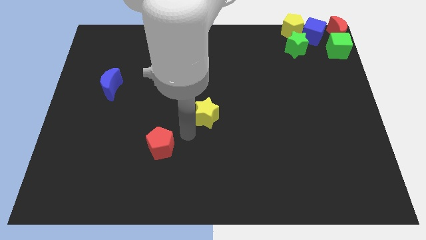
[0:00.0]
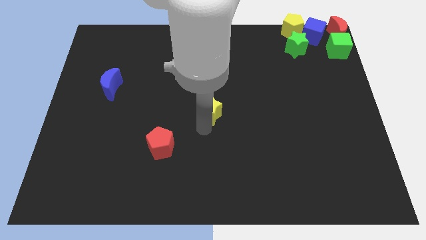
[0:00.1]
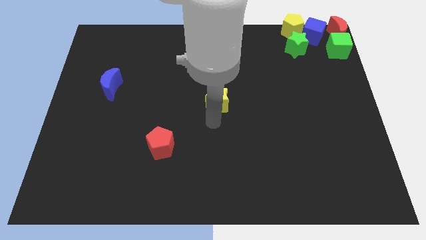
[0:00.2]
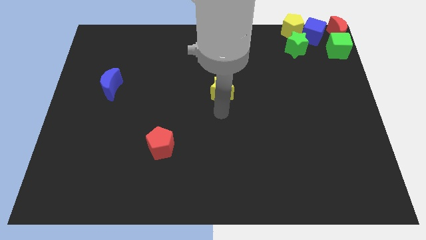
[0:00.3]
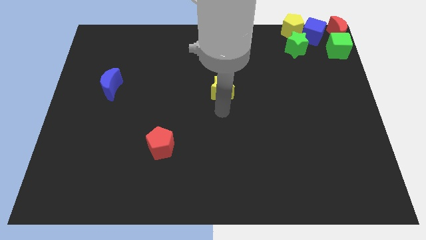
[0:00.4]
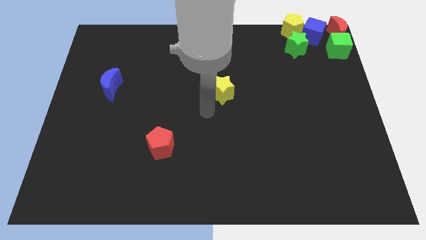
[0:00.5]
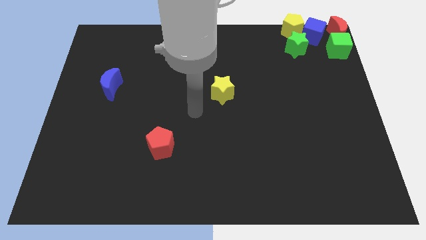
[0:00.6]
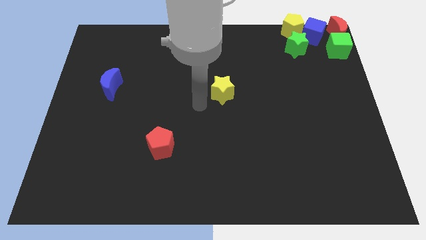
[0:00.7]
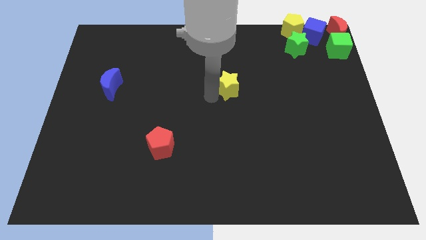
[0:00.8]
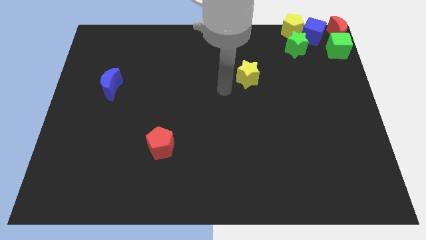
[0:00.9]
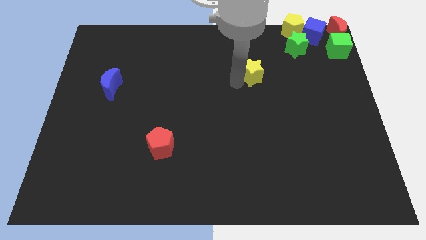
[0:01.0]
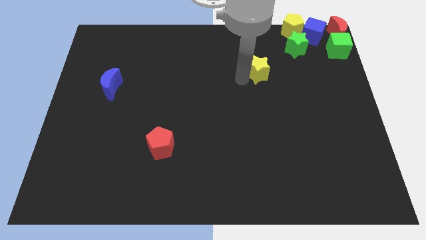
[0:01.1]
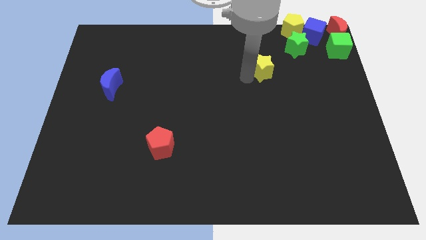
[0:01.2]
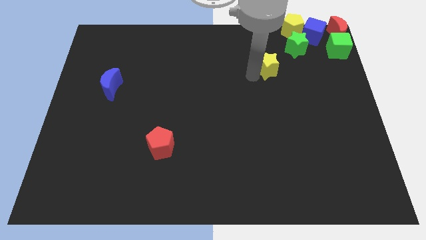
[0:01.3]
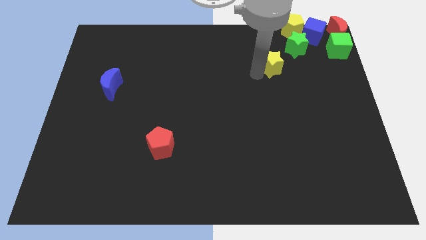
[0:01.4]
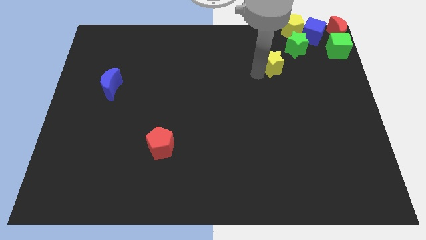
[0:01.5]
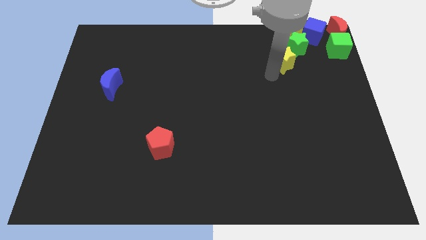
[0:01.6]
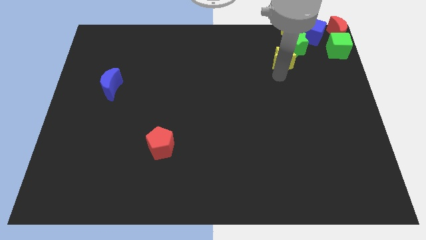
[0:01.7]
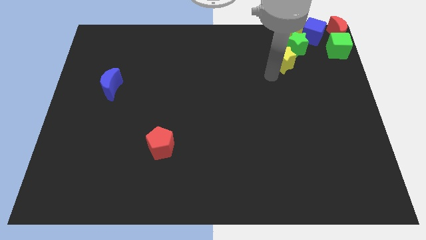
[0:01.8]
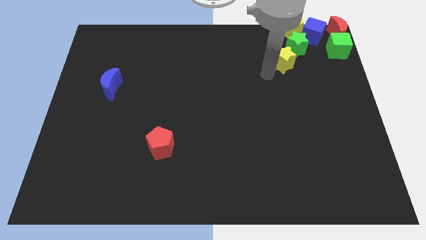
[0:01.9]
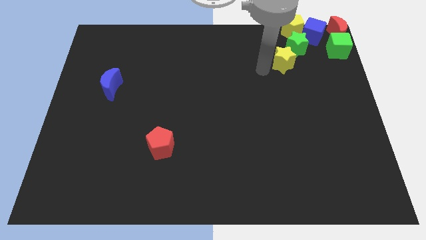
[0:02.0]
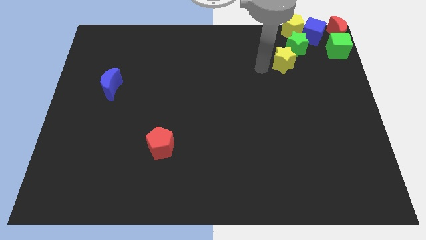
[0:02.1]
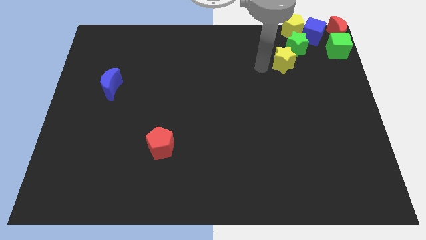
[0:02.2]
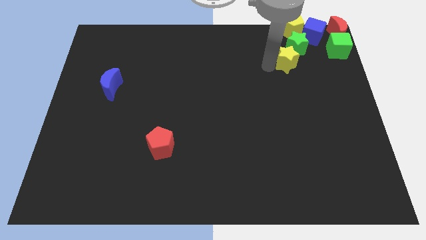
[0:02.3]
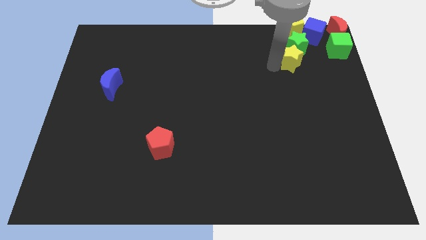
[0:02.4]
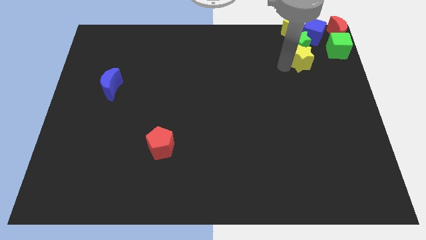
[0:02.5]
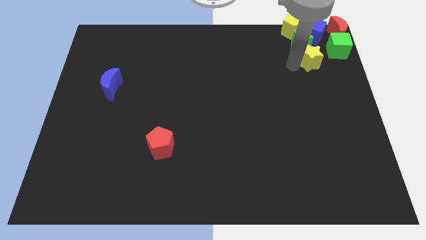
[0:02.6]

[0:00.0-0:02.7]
push the yellow star into bottom of green star

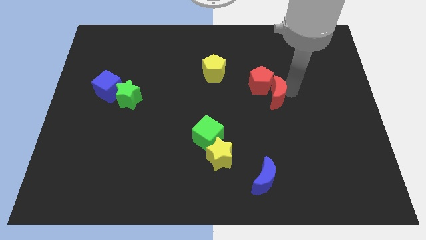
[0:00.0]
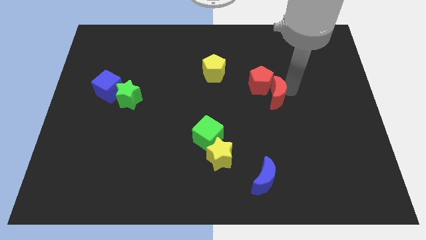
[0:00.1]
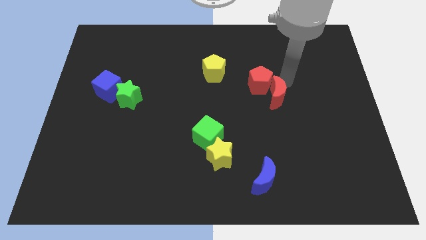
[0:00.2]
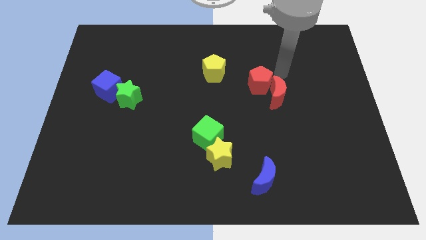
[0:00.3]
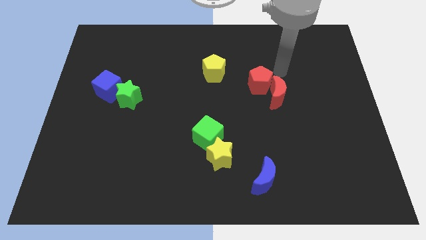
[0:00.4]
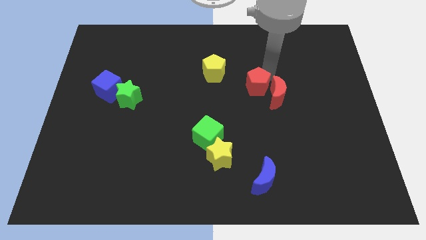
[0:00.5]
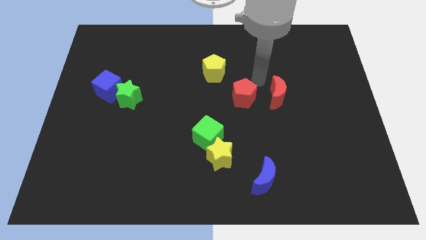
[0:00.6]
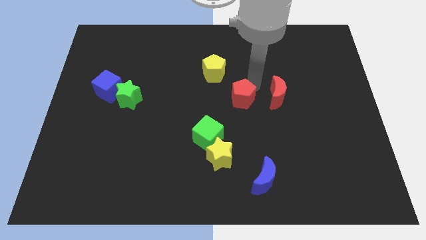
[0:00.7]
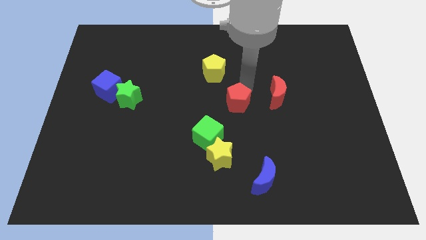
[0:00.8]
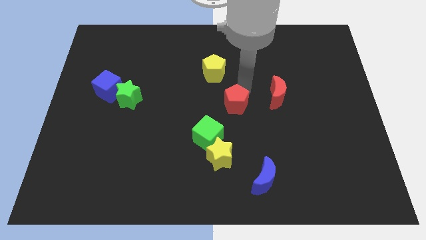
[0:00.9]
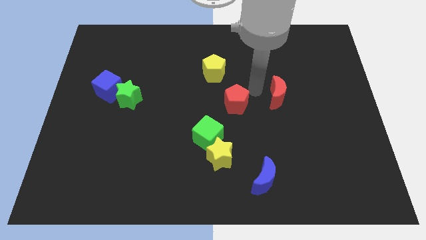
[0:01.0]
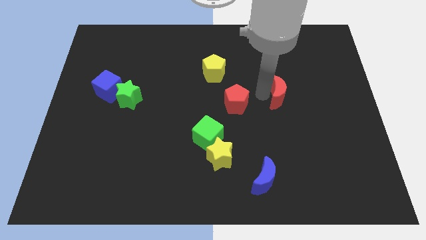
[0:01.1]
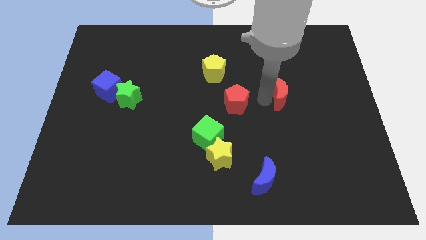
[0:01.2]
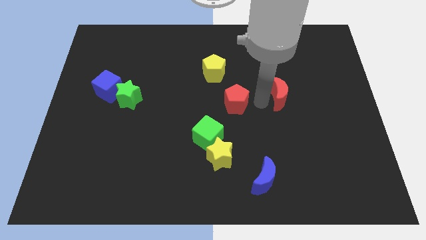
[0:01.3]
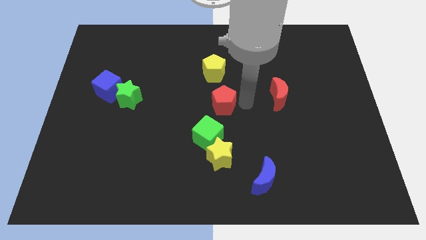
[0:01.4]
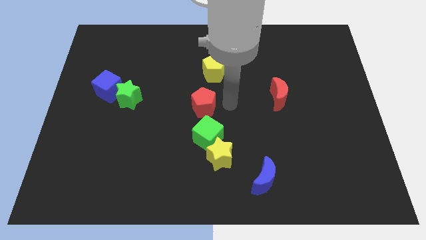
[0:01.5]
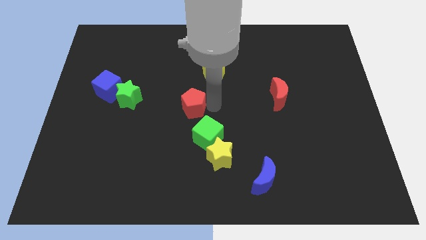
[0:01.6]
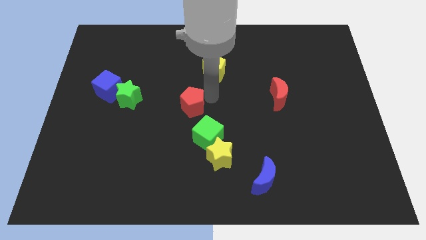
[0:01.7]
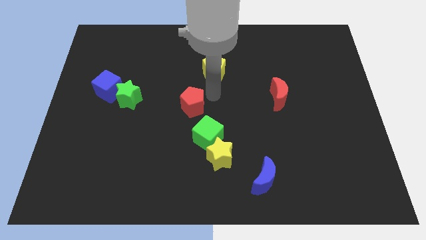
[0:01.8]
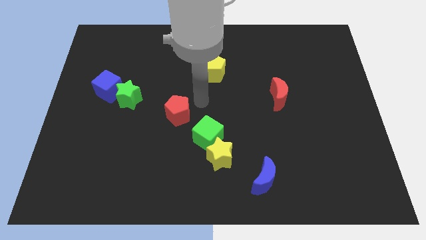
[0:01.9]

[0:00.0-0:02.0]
separate the red pentagon from red crescent

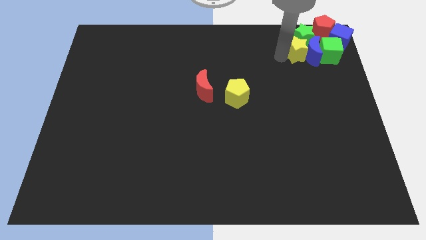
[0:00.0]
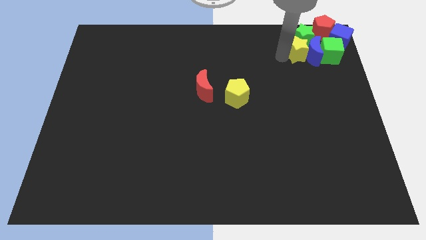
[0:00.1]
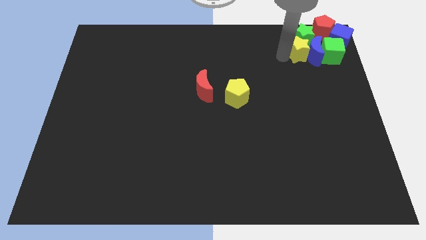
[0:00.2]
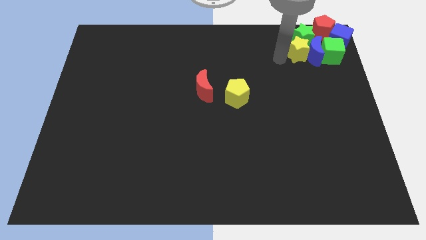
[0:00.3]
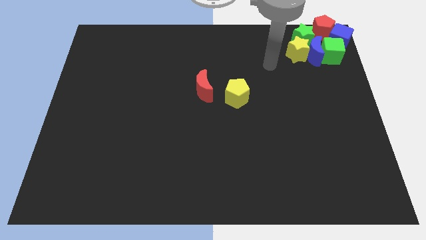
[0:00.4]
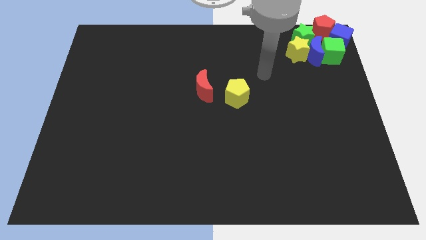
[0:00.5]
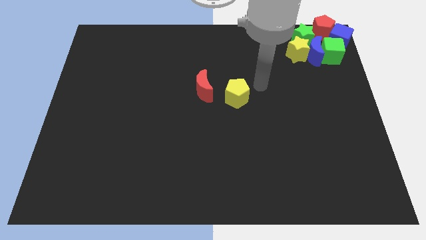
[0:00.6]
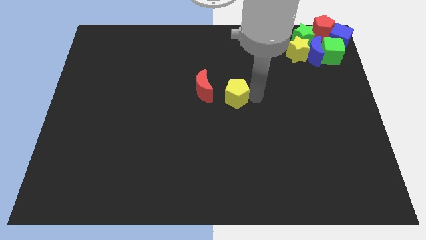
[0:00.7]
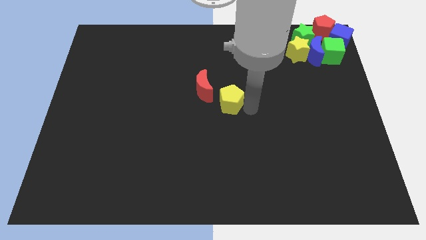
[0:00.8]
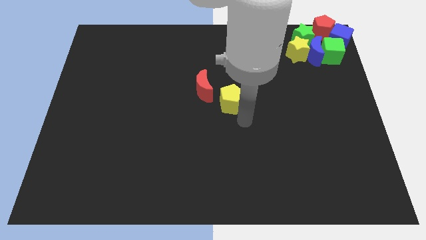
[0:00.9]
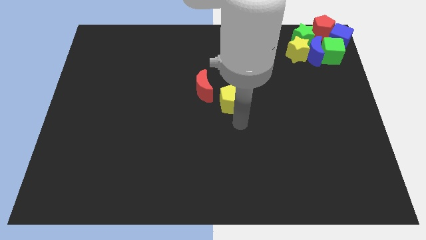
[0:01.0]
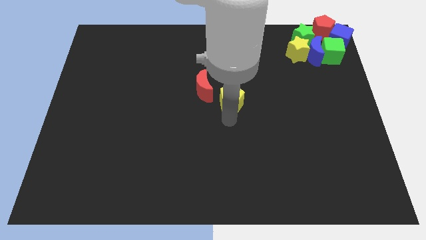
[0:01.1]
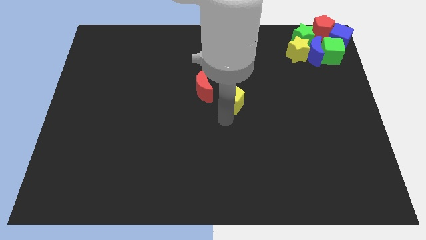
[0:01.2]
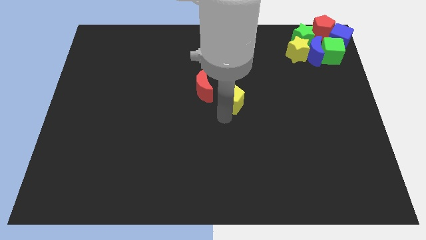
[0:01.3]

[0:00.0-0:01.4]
move your arm away from the yellow star

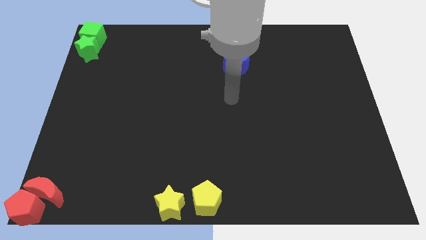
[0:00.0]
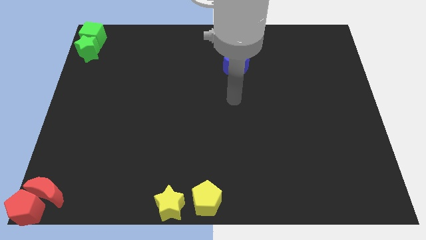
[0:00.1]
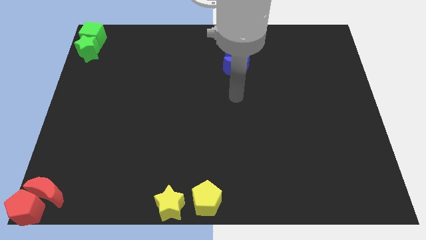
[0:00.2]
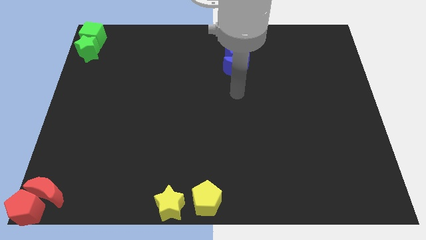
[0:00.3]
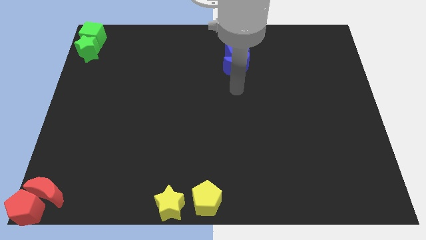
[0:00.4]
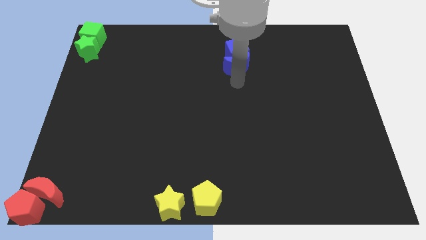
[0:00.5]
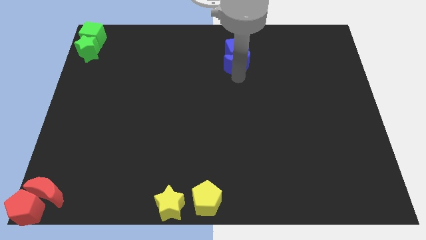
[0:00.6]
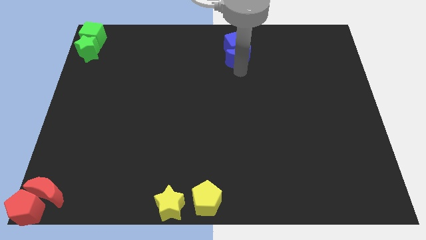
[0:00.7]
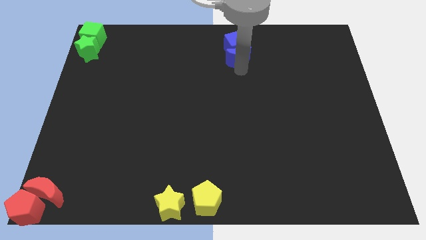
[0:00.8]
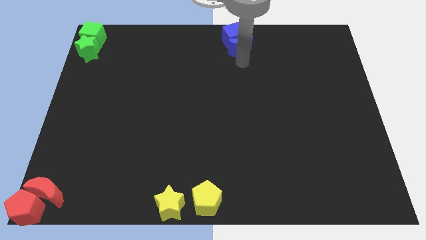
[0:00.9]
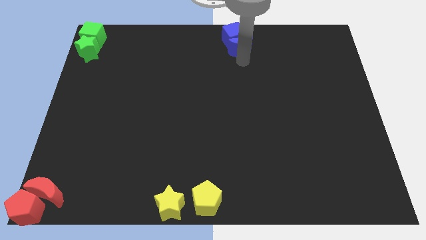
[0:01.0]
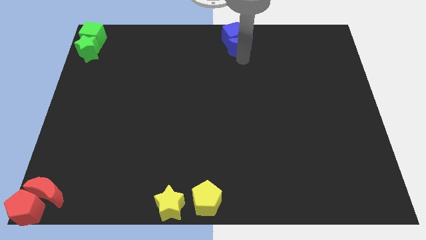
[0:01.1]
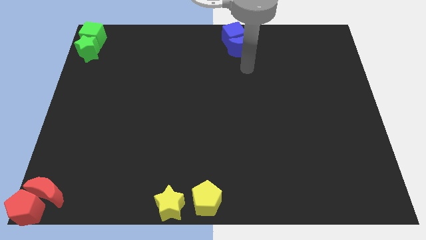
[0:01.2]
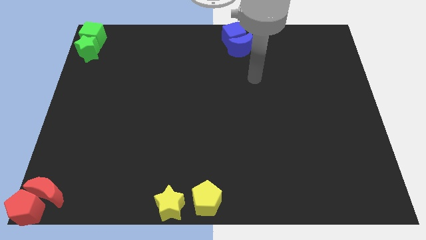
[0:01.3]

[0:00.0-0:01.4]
push the blue blocks at the top center of the board

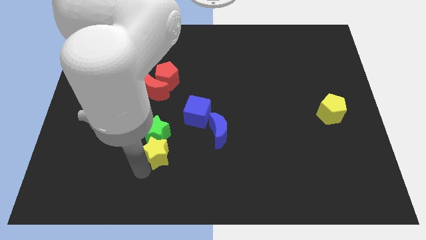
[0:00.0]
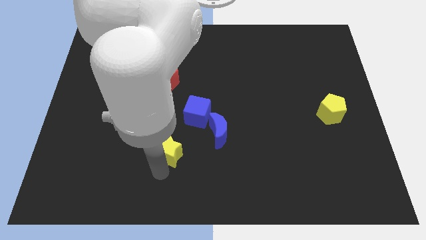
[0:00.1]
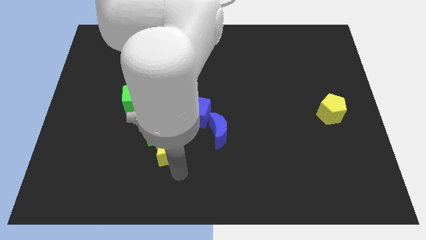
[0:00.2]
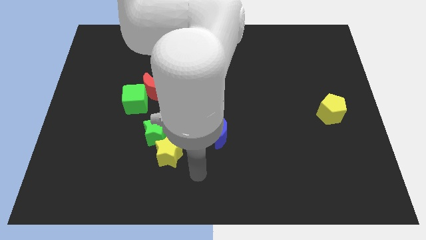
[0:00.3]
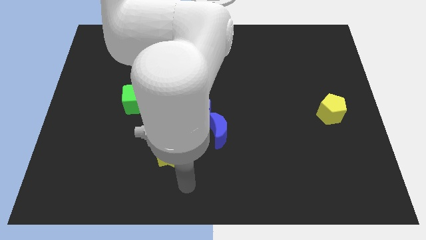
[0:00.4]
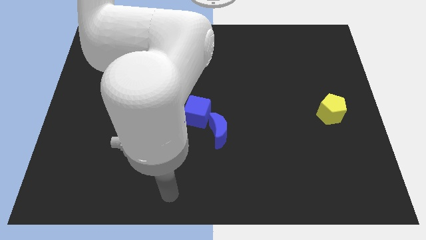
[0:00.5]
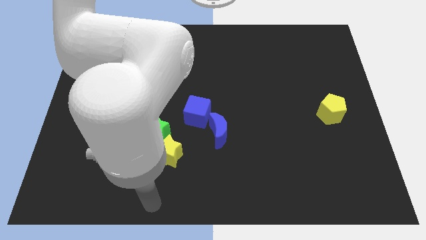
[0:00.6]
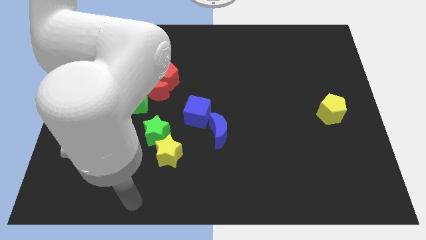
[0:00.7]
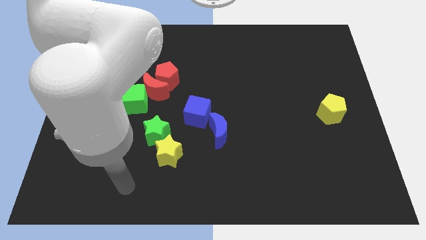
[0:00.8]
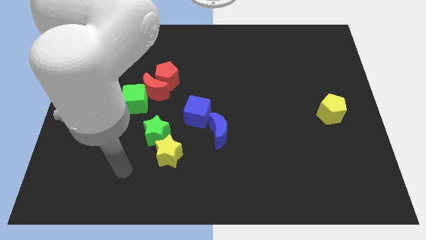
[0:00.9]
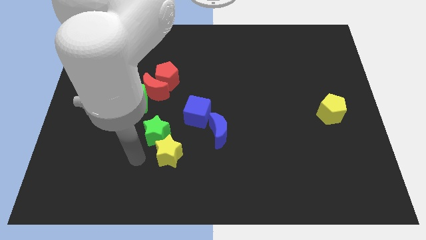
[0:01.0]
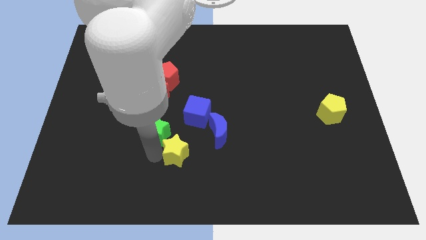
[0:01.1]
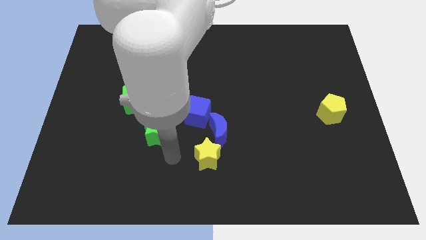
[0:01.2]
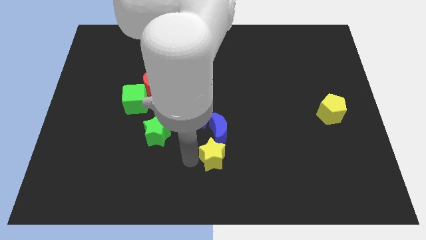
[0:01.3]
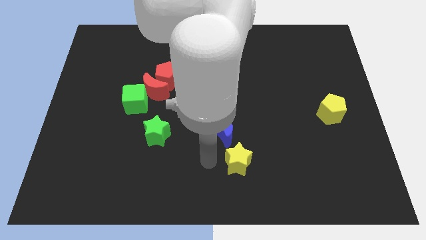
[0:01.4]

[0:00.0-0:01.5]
place yellow star below blue moon
